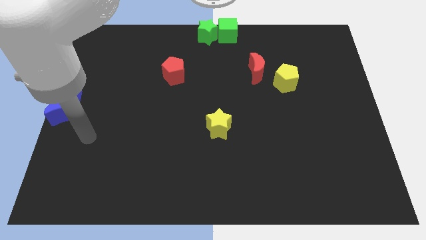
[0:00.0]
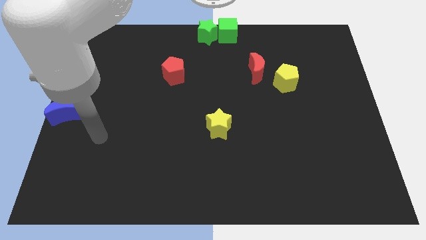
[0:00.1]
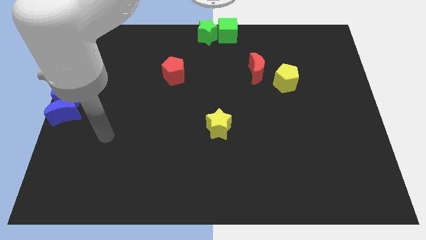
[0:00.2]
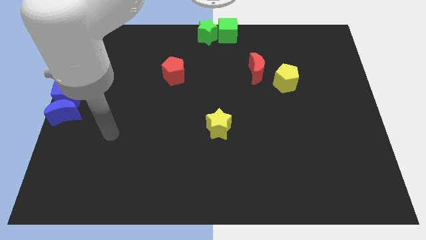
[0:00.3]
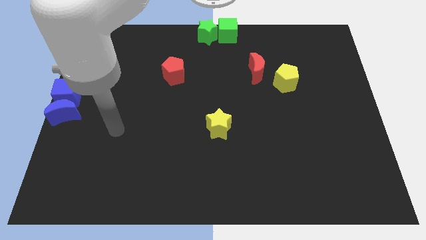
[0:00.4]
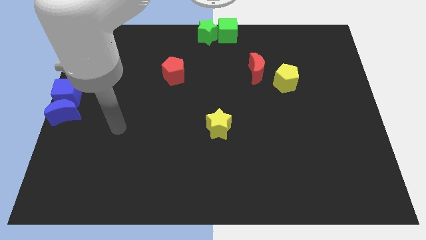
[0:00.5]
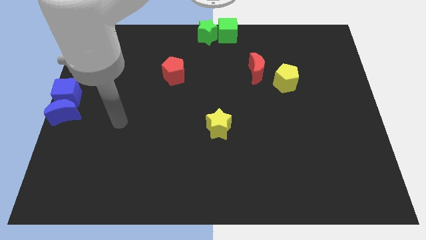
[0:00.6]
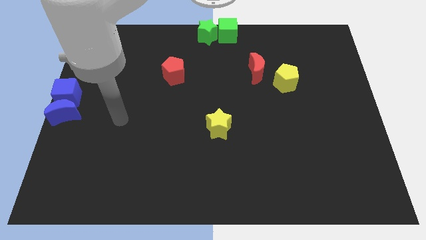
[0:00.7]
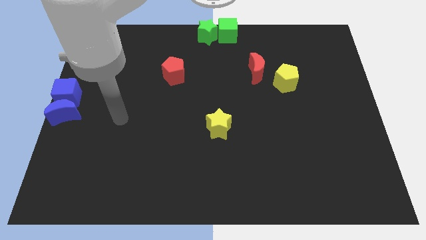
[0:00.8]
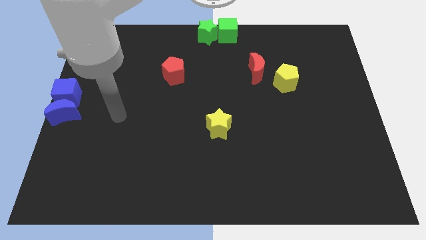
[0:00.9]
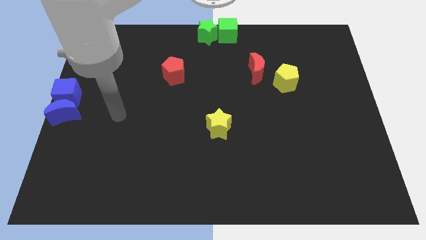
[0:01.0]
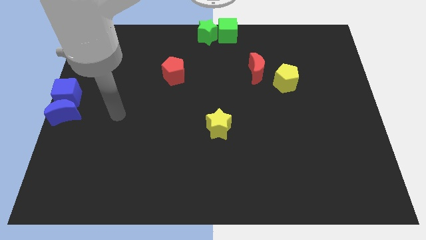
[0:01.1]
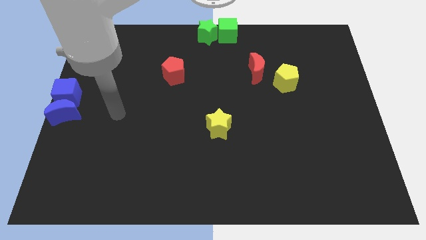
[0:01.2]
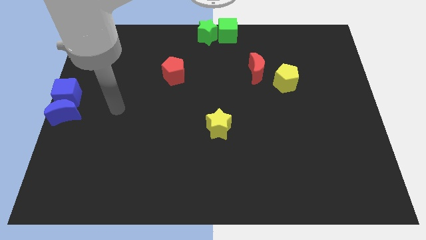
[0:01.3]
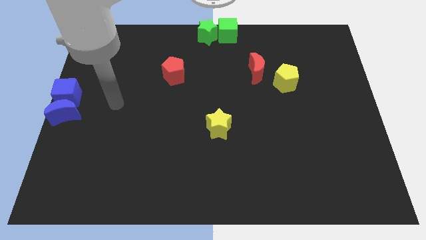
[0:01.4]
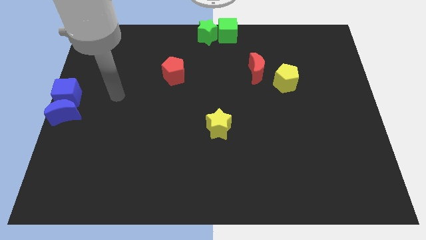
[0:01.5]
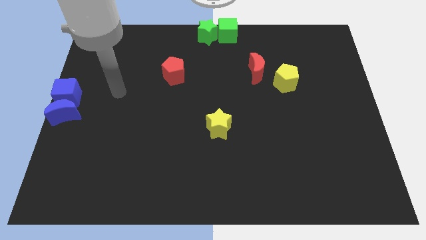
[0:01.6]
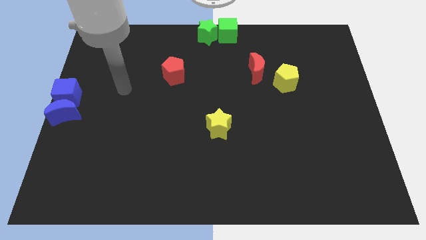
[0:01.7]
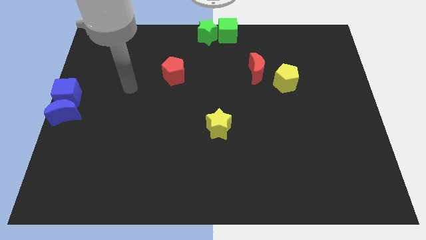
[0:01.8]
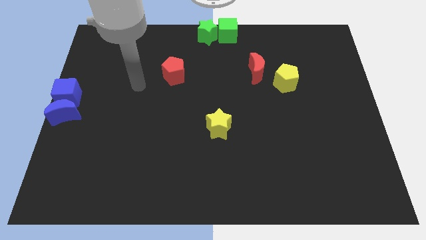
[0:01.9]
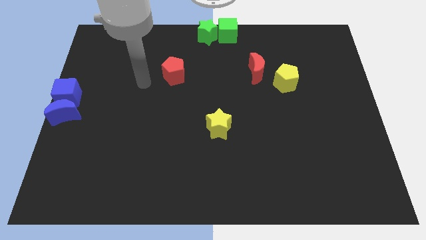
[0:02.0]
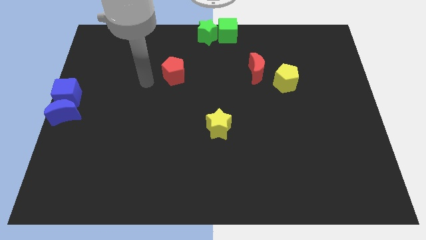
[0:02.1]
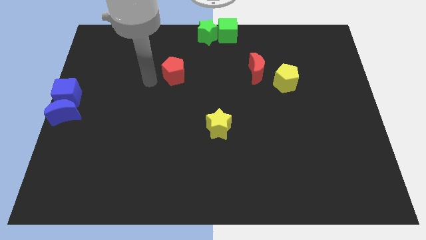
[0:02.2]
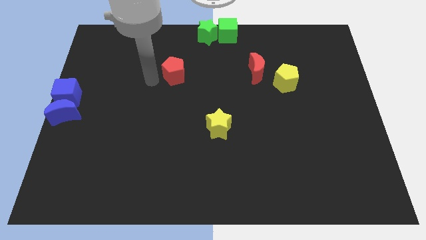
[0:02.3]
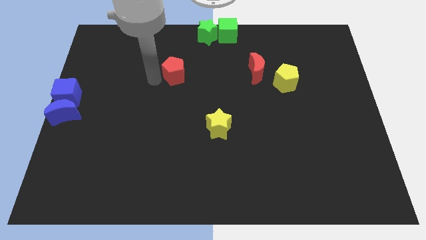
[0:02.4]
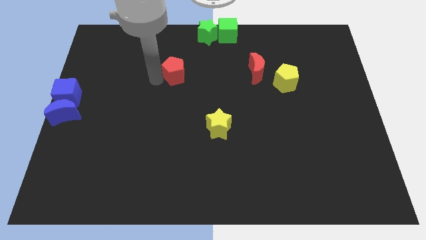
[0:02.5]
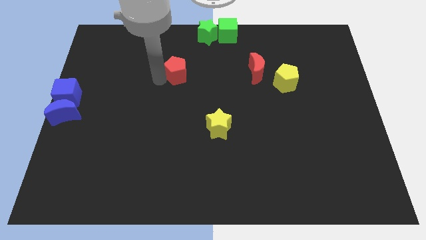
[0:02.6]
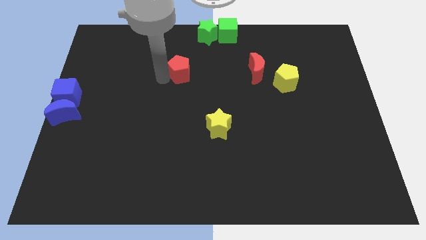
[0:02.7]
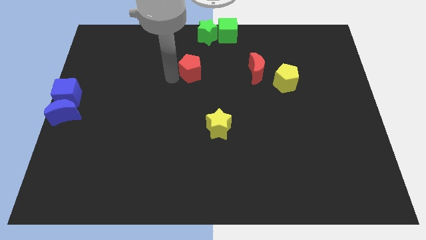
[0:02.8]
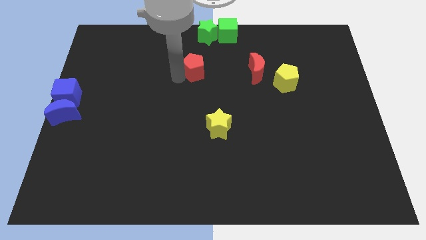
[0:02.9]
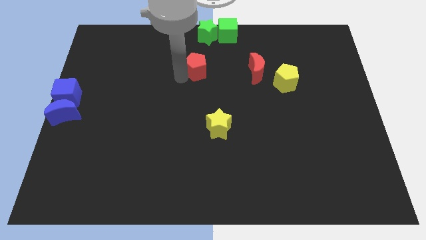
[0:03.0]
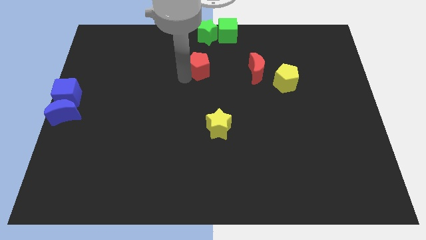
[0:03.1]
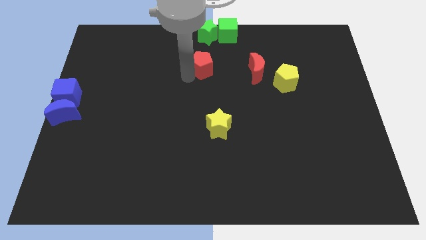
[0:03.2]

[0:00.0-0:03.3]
tap the red pentagon

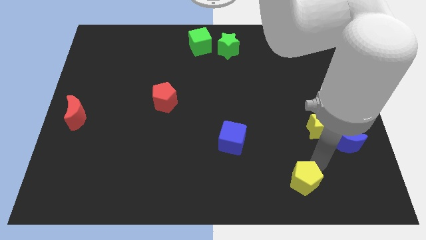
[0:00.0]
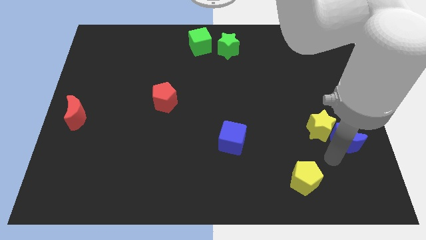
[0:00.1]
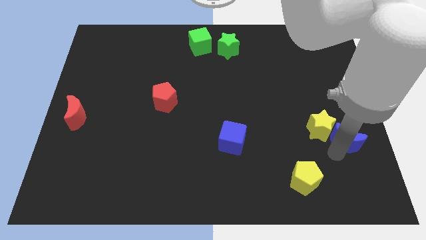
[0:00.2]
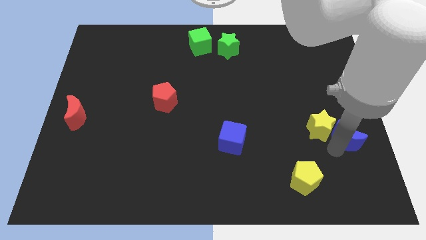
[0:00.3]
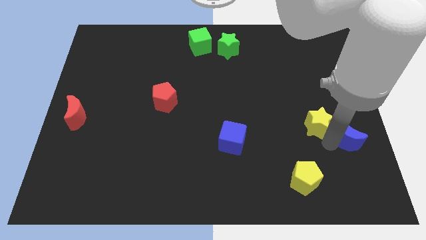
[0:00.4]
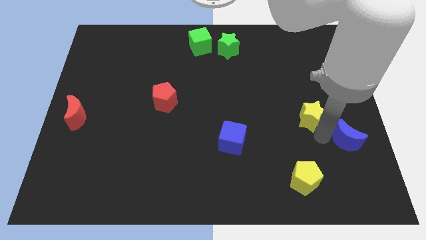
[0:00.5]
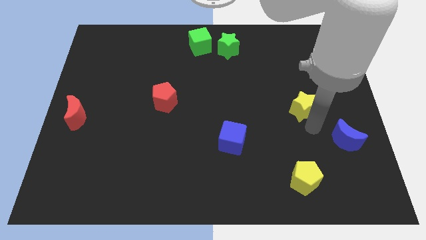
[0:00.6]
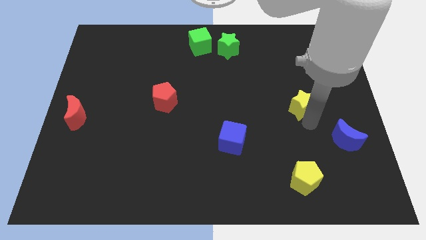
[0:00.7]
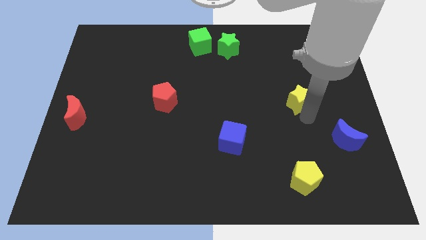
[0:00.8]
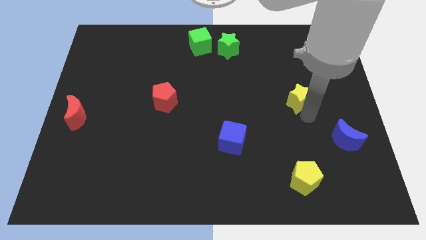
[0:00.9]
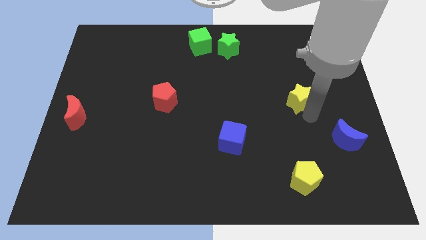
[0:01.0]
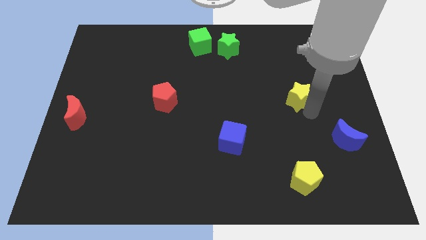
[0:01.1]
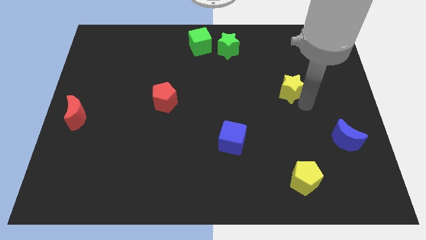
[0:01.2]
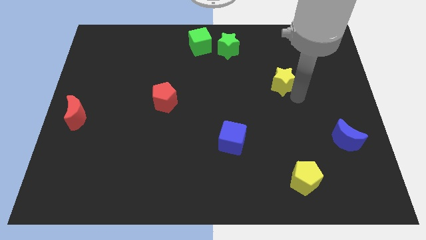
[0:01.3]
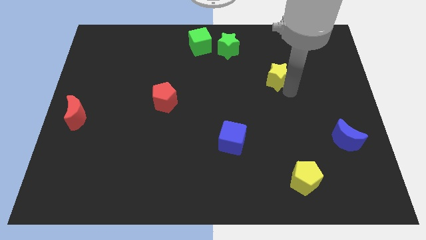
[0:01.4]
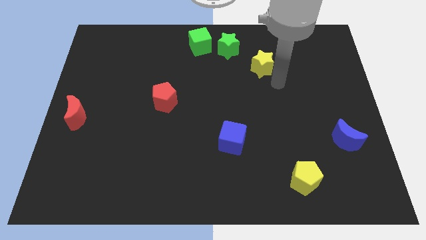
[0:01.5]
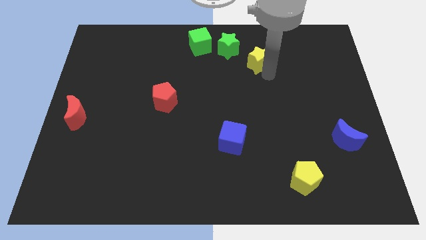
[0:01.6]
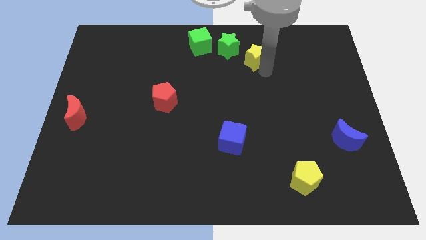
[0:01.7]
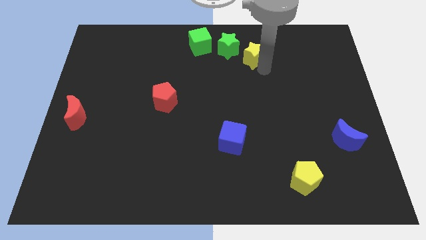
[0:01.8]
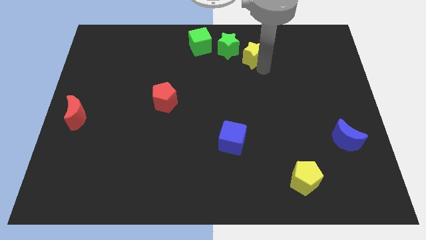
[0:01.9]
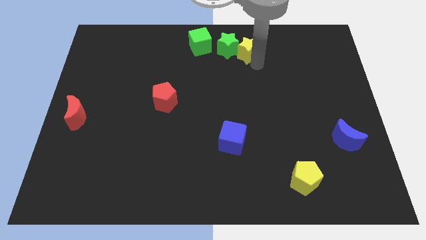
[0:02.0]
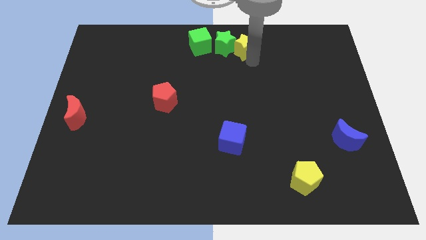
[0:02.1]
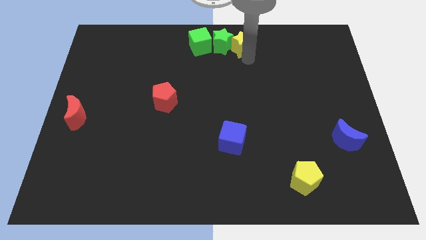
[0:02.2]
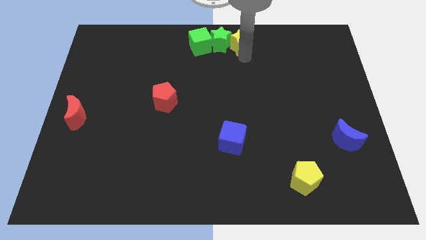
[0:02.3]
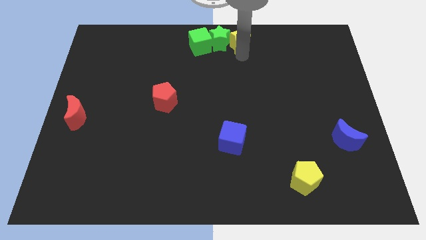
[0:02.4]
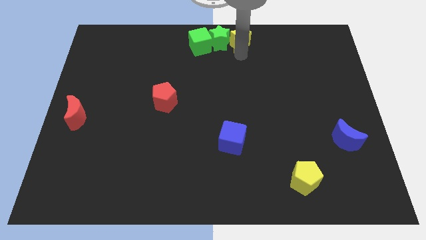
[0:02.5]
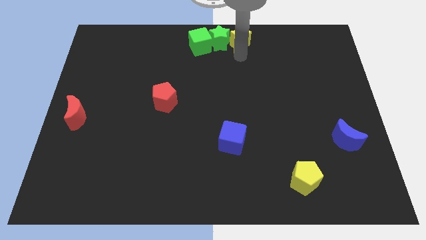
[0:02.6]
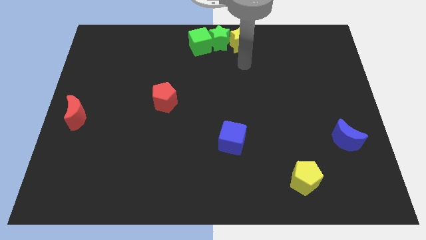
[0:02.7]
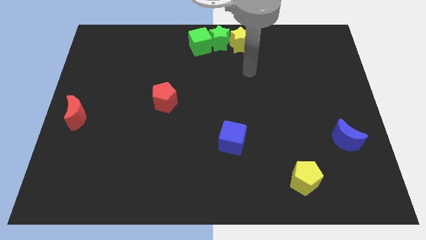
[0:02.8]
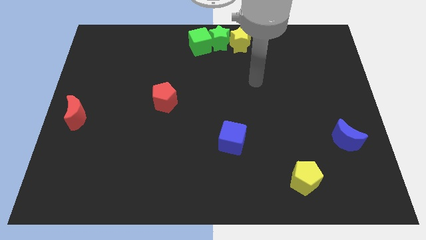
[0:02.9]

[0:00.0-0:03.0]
move the yellow star to the right of the group of green blocks

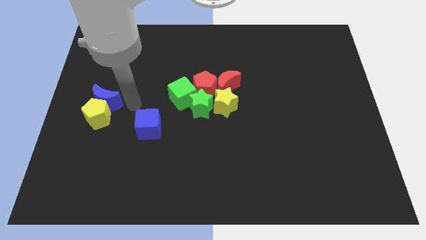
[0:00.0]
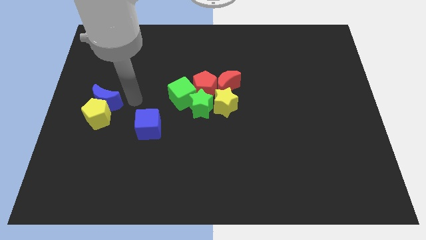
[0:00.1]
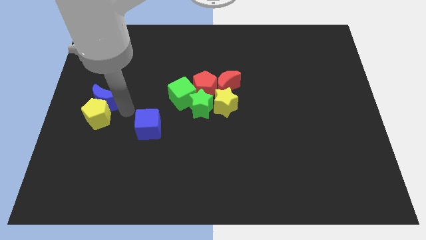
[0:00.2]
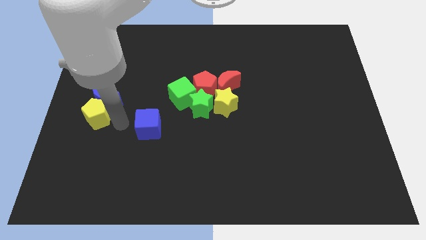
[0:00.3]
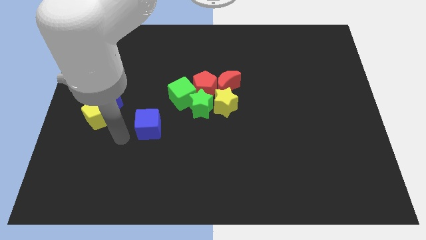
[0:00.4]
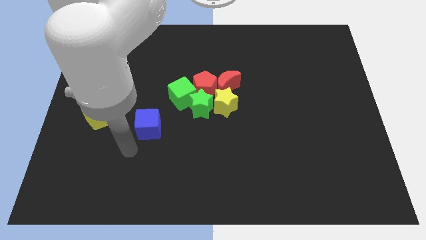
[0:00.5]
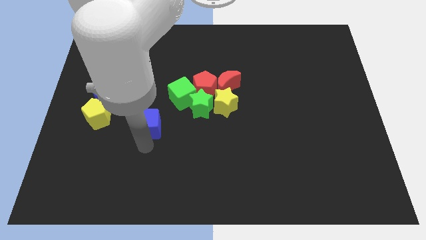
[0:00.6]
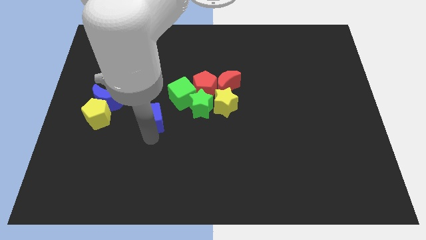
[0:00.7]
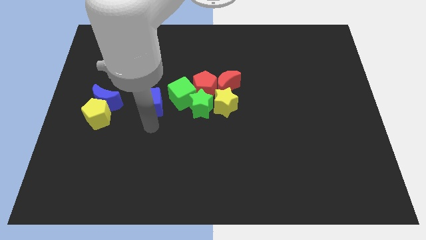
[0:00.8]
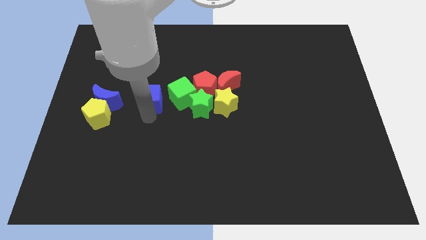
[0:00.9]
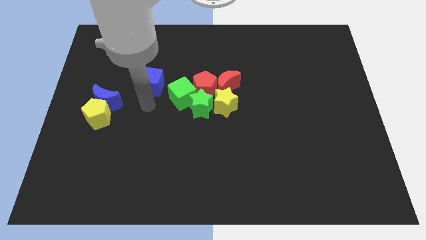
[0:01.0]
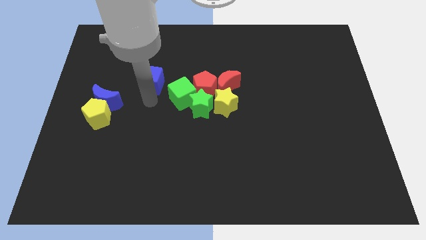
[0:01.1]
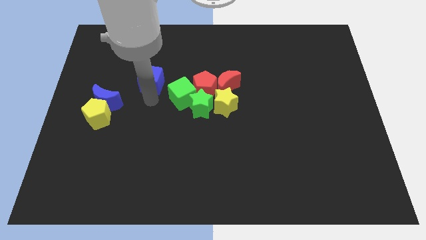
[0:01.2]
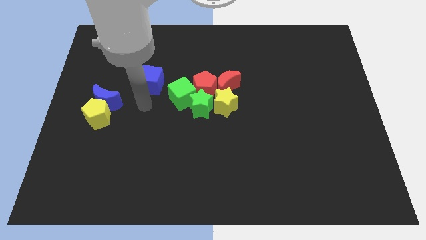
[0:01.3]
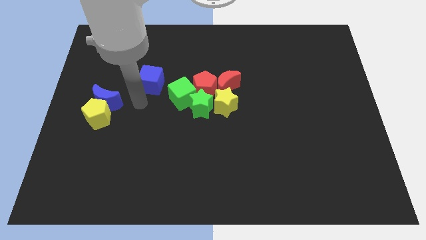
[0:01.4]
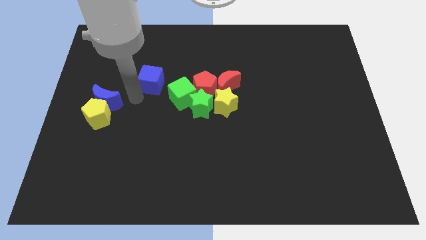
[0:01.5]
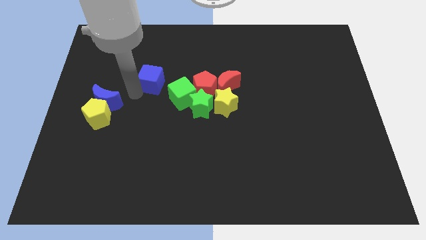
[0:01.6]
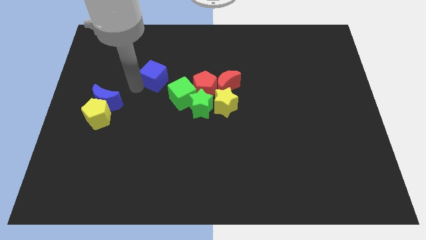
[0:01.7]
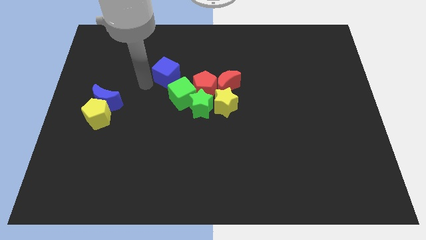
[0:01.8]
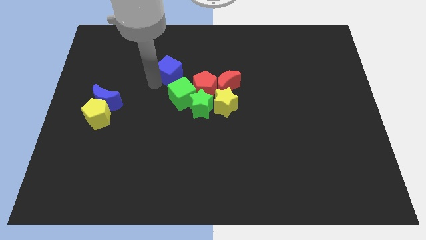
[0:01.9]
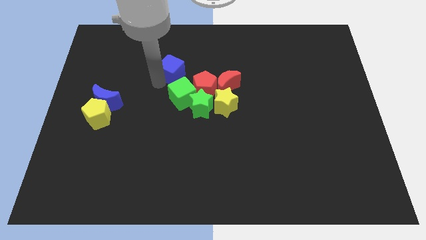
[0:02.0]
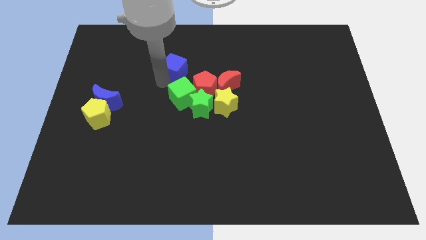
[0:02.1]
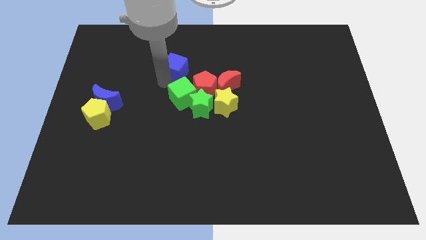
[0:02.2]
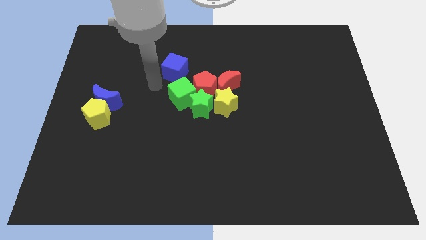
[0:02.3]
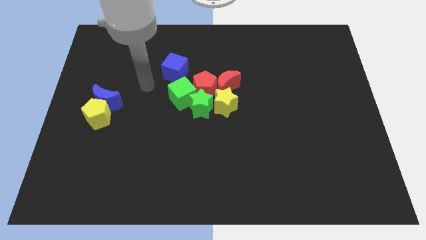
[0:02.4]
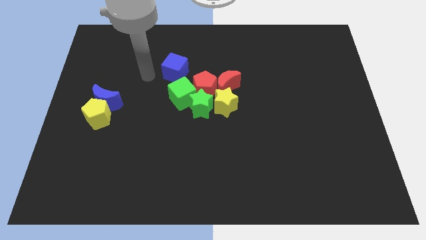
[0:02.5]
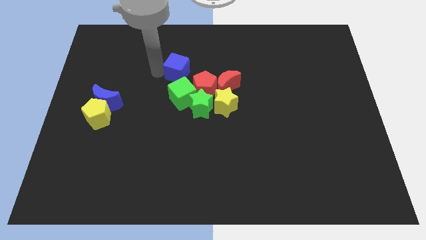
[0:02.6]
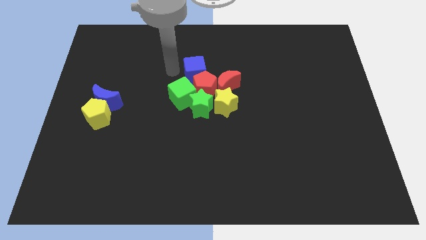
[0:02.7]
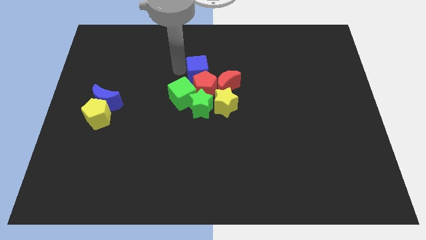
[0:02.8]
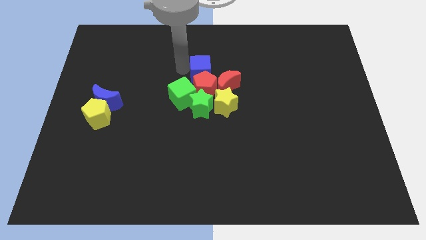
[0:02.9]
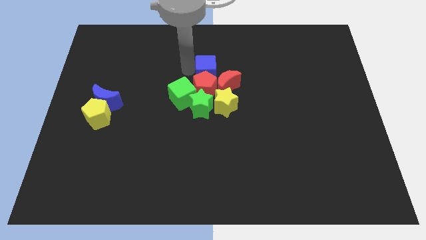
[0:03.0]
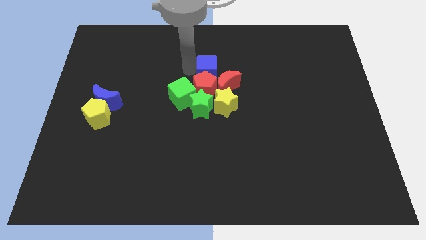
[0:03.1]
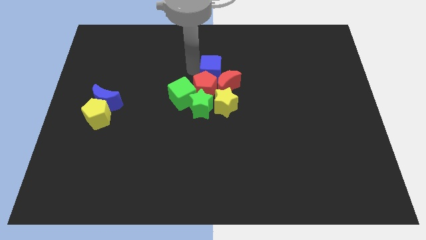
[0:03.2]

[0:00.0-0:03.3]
place the blue cube at the top side of the red pentagon
